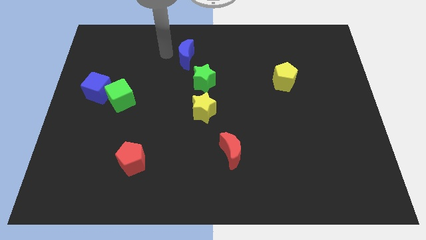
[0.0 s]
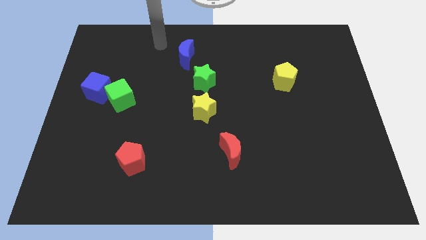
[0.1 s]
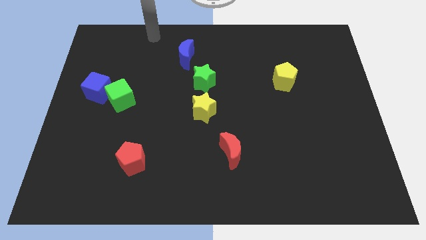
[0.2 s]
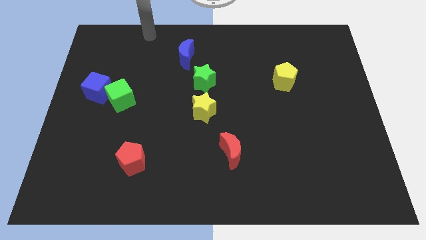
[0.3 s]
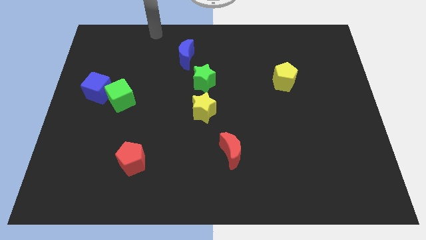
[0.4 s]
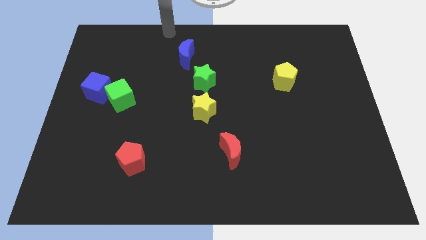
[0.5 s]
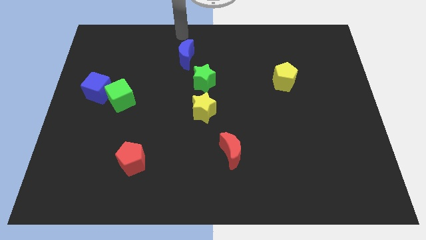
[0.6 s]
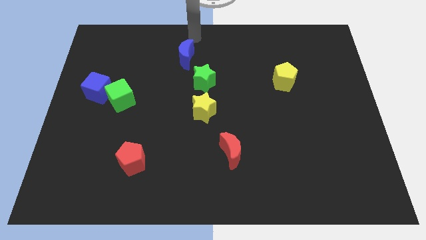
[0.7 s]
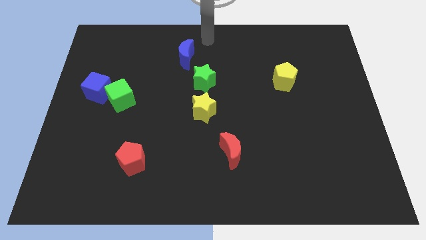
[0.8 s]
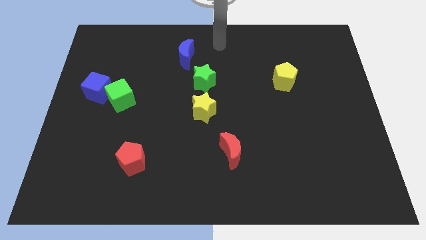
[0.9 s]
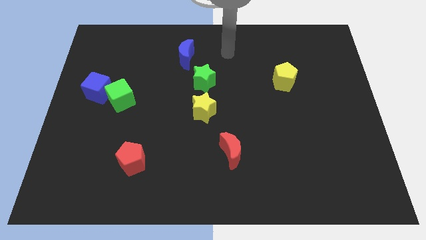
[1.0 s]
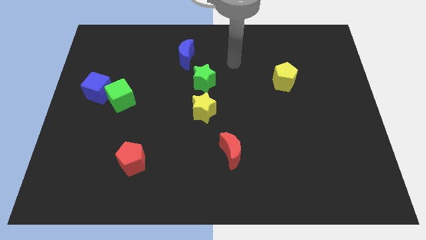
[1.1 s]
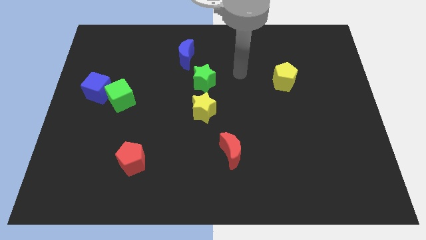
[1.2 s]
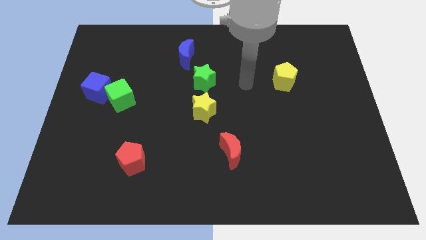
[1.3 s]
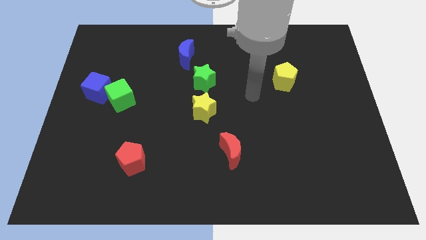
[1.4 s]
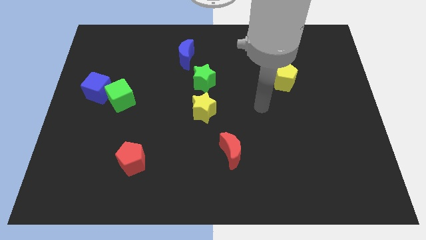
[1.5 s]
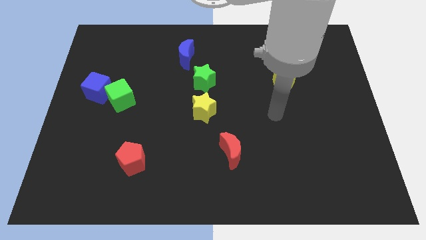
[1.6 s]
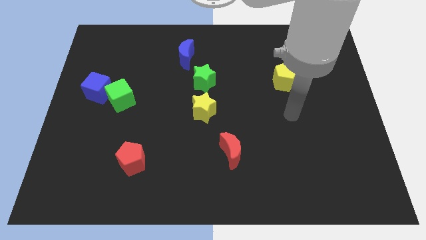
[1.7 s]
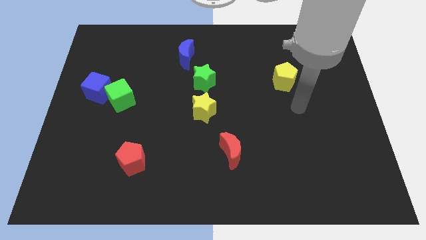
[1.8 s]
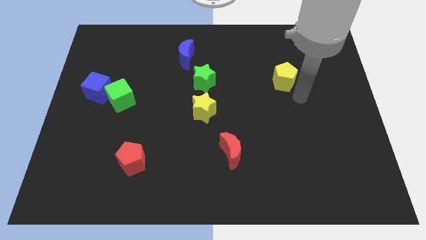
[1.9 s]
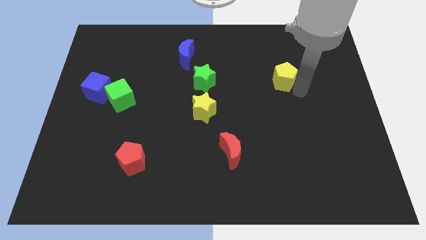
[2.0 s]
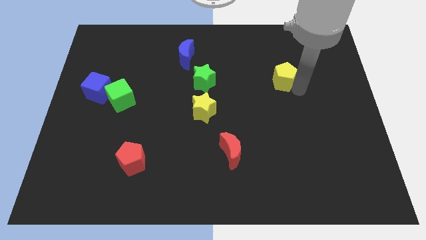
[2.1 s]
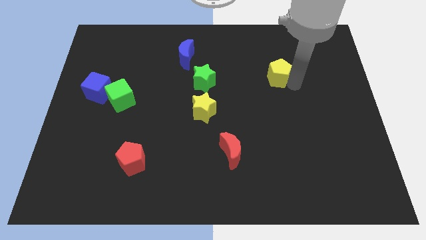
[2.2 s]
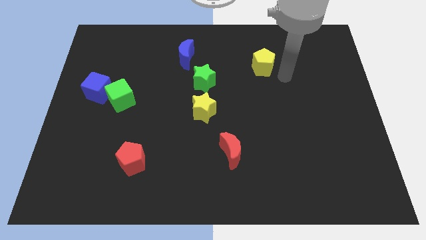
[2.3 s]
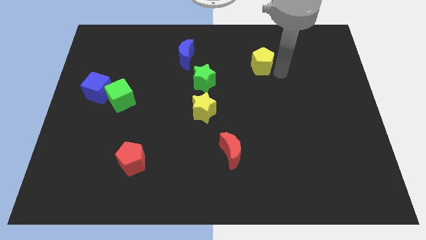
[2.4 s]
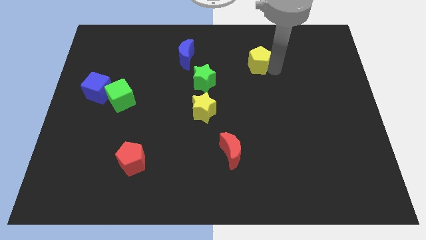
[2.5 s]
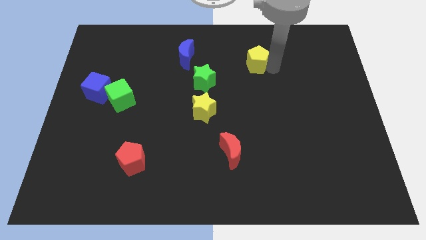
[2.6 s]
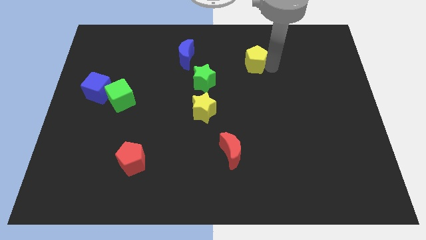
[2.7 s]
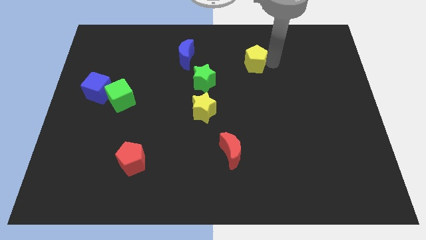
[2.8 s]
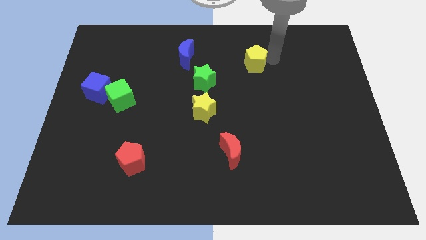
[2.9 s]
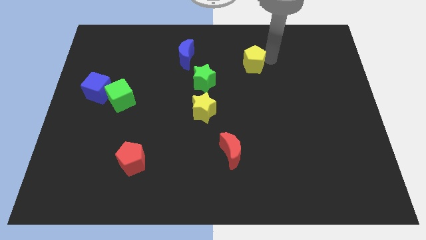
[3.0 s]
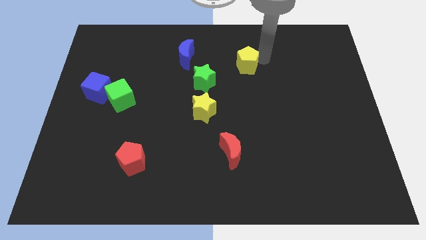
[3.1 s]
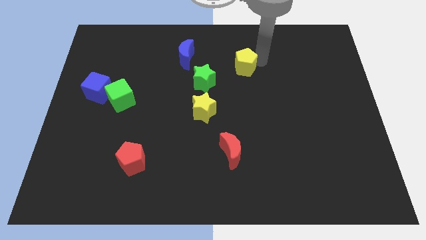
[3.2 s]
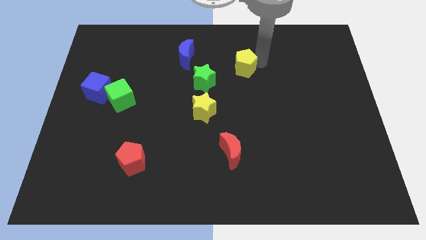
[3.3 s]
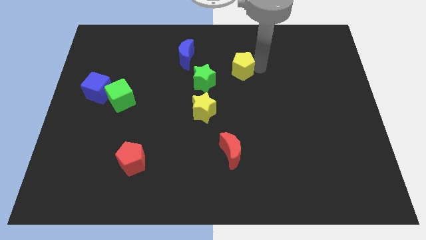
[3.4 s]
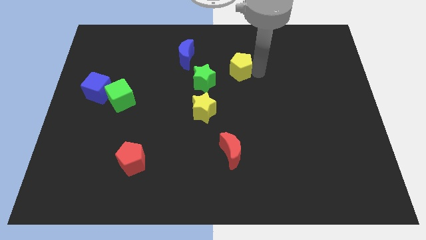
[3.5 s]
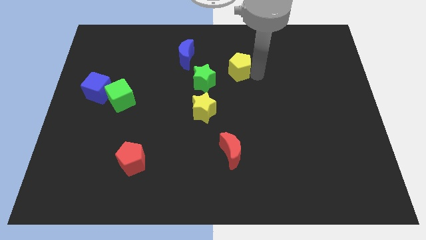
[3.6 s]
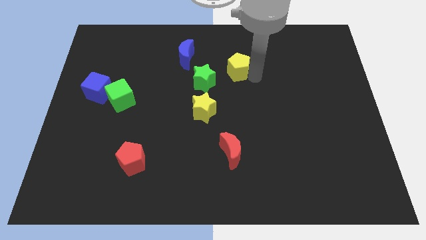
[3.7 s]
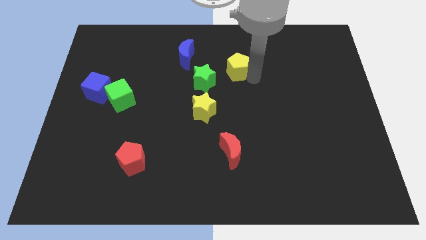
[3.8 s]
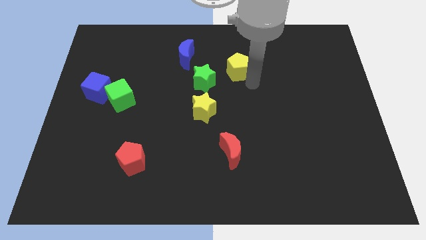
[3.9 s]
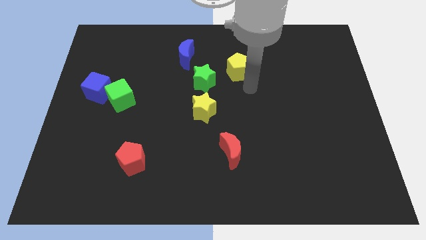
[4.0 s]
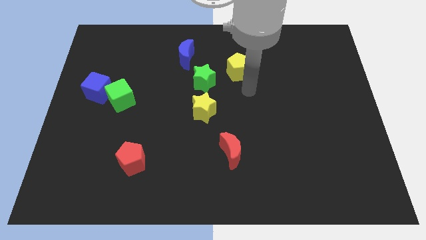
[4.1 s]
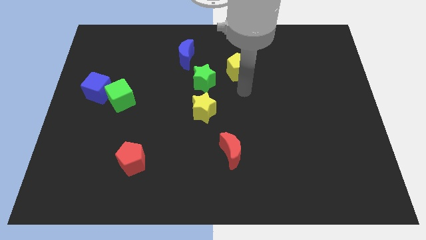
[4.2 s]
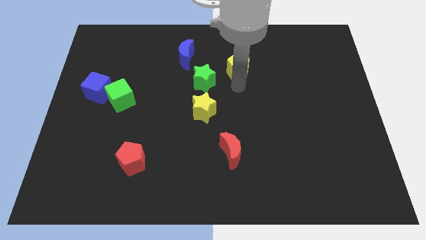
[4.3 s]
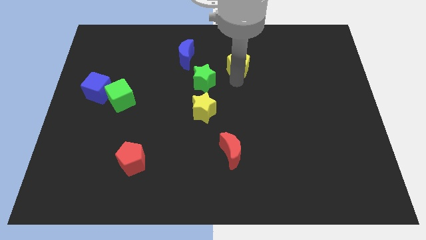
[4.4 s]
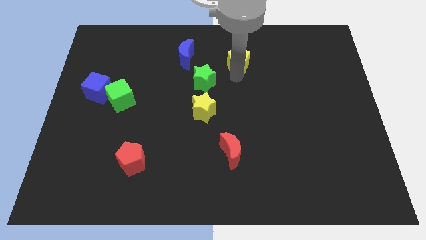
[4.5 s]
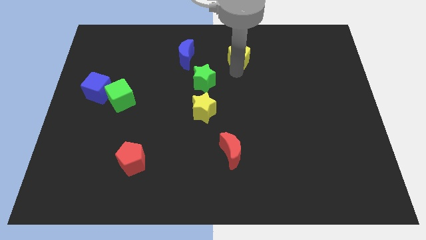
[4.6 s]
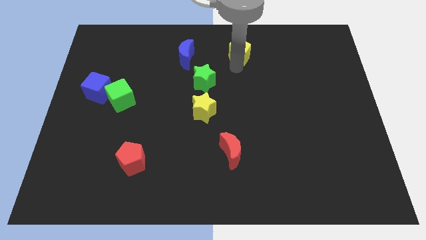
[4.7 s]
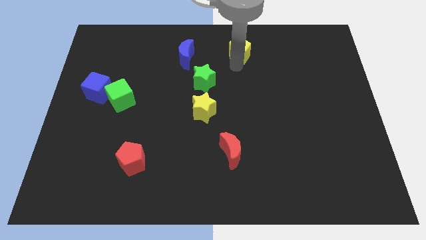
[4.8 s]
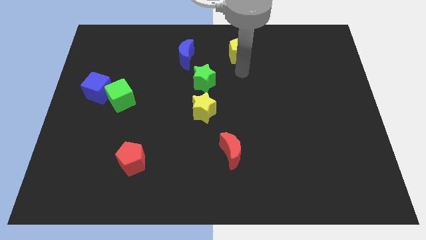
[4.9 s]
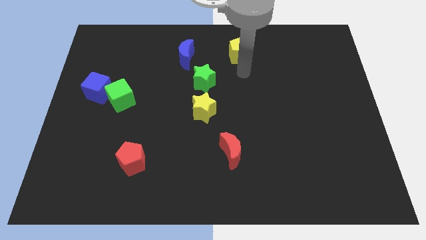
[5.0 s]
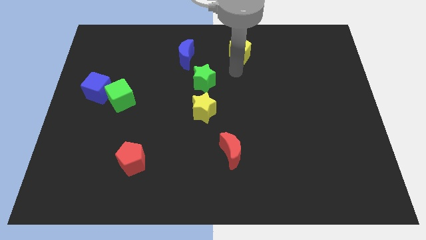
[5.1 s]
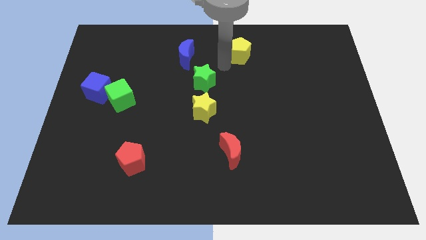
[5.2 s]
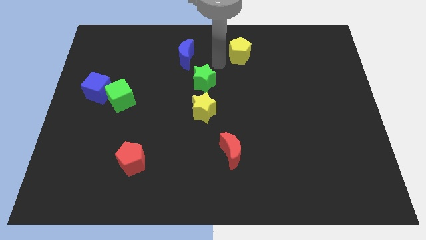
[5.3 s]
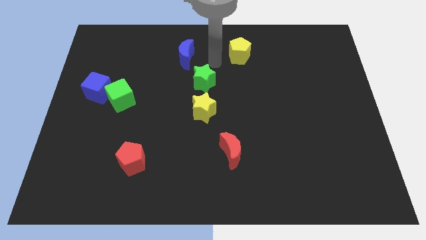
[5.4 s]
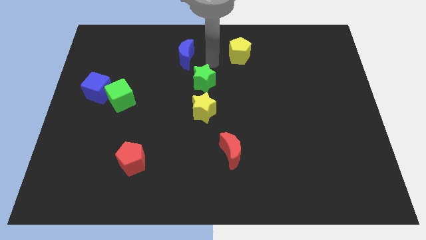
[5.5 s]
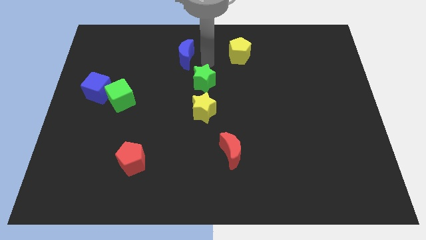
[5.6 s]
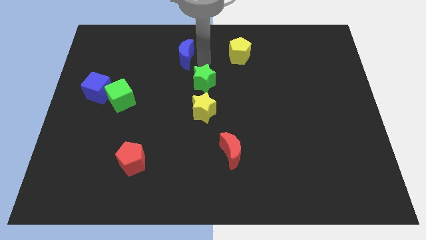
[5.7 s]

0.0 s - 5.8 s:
move the yellow pentagon to the top of the board

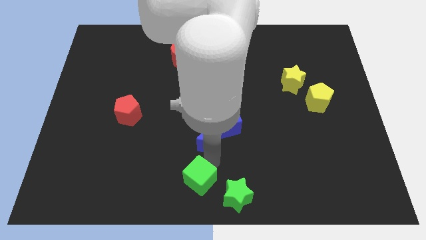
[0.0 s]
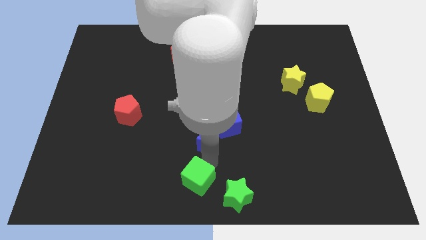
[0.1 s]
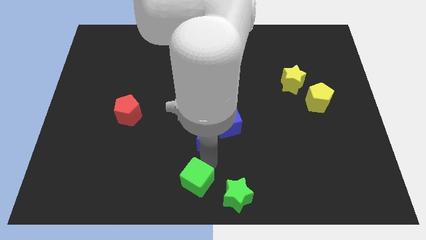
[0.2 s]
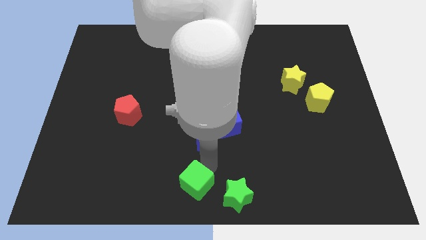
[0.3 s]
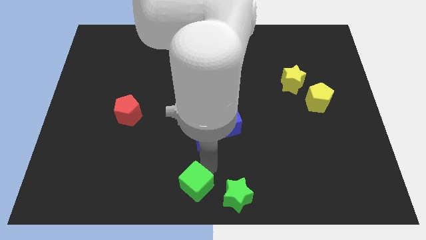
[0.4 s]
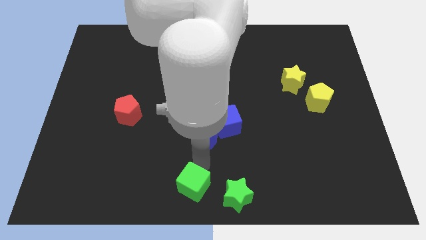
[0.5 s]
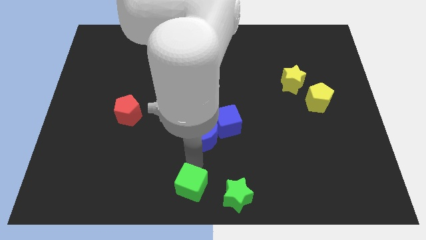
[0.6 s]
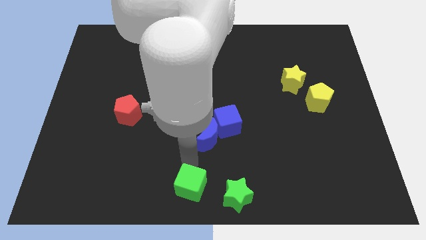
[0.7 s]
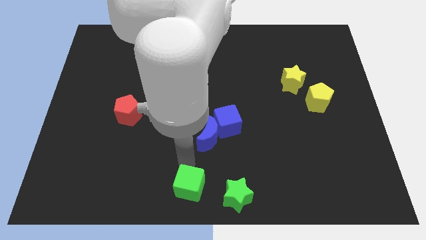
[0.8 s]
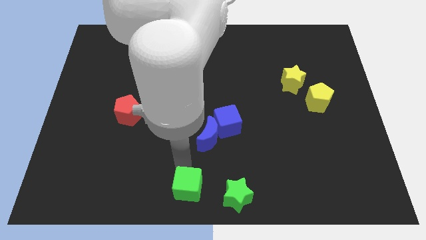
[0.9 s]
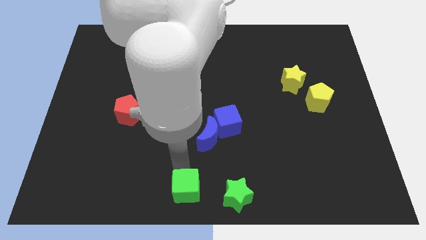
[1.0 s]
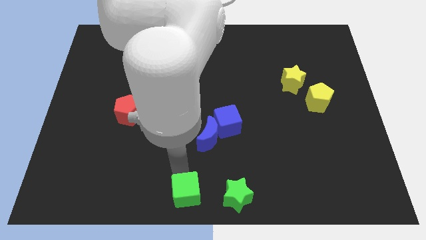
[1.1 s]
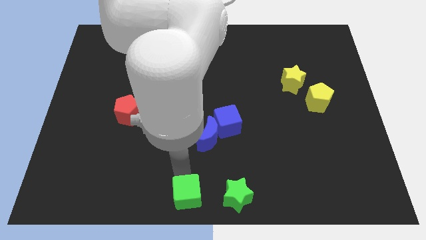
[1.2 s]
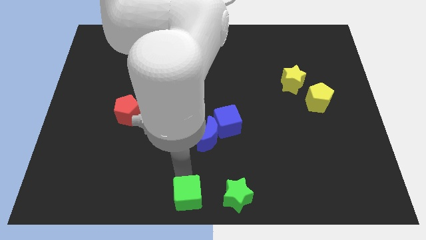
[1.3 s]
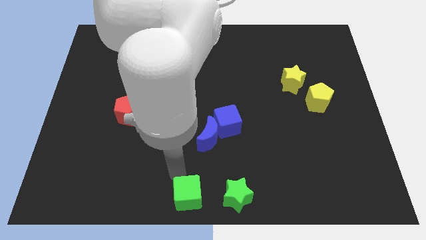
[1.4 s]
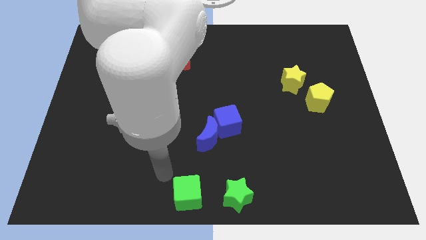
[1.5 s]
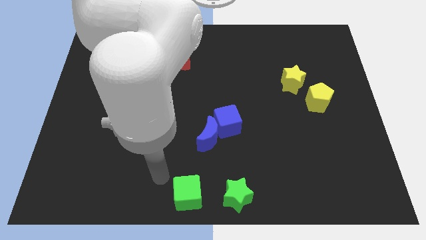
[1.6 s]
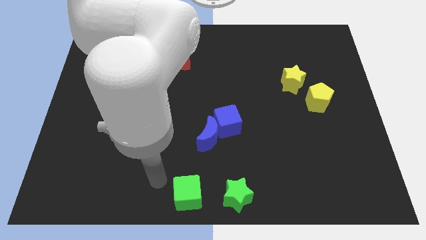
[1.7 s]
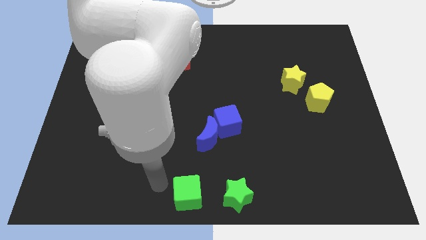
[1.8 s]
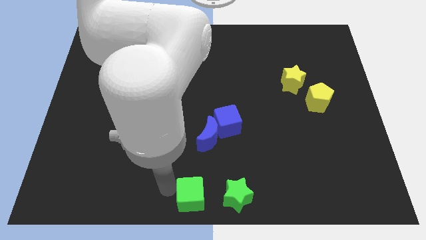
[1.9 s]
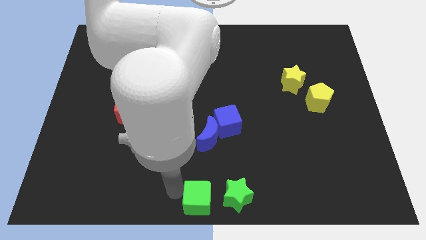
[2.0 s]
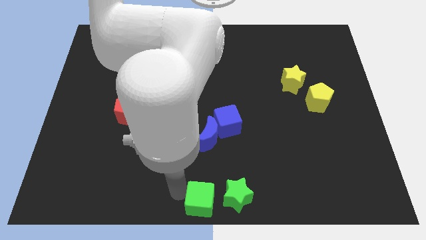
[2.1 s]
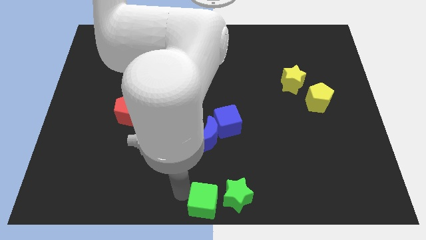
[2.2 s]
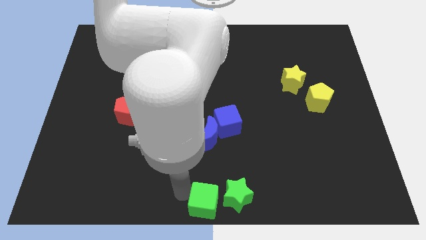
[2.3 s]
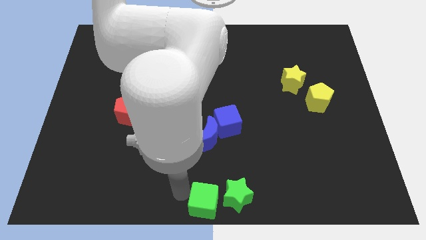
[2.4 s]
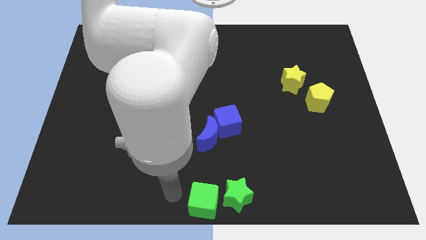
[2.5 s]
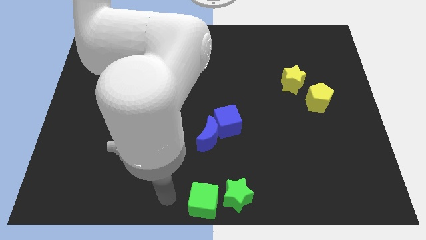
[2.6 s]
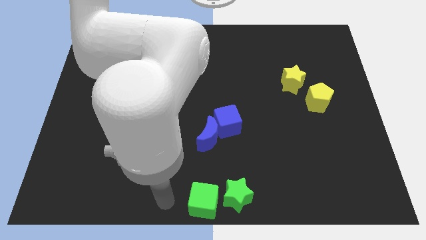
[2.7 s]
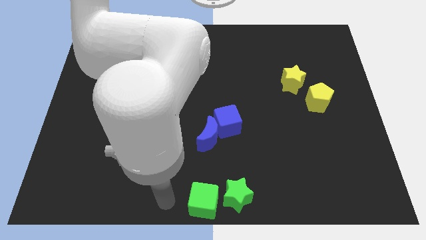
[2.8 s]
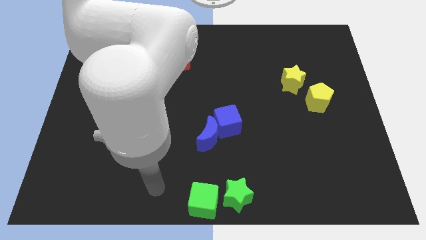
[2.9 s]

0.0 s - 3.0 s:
move green cube left beside green star

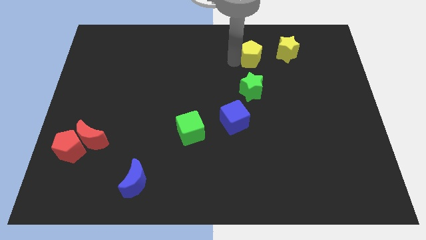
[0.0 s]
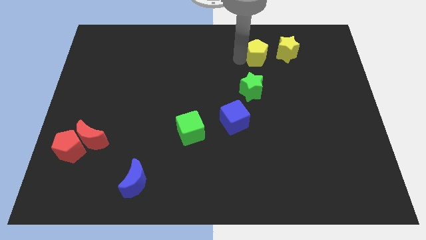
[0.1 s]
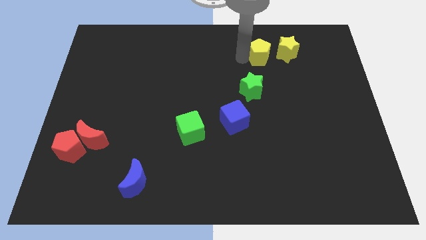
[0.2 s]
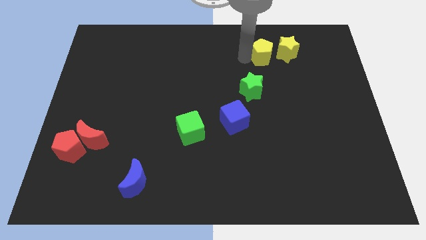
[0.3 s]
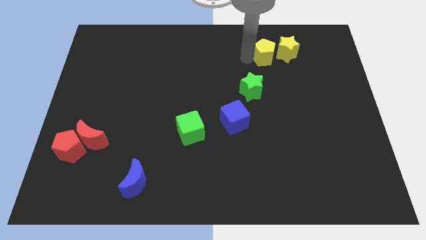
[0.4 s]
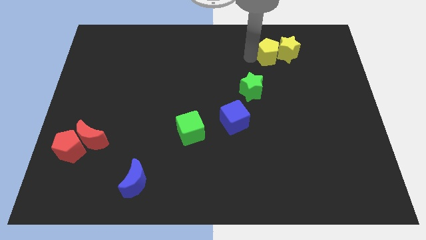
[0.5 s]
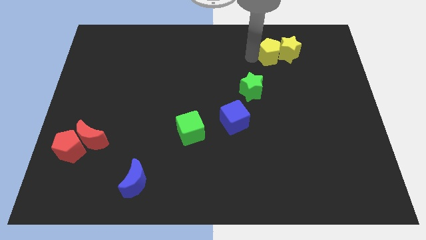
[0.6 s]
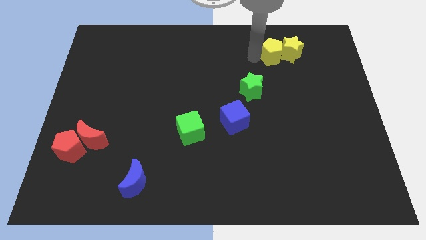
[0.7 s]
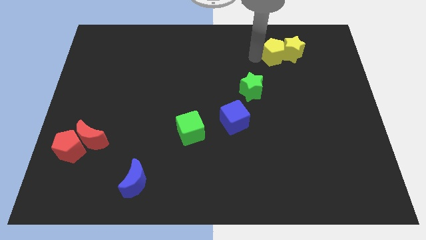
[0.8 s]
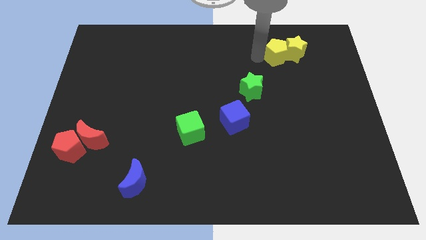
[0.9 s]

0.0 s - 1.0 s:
push the yellow pentagon to the left of the yellow star
